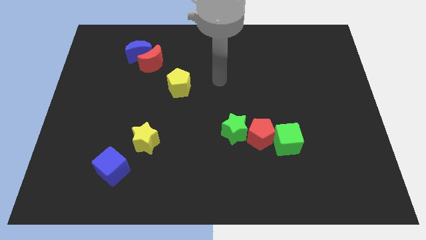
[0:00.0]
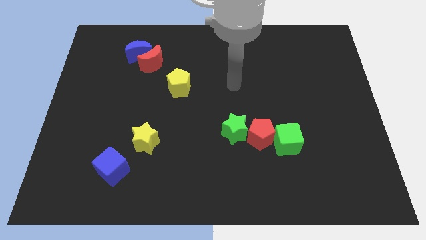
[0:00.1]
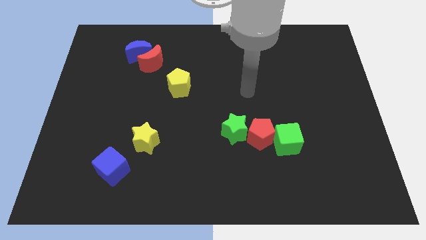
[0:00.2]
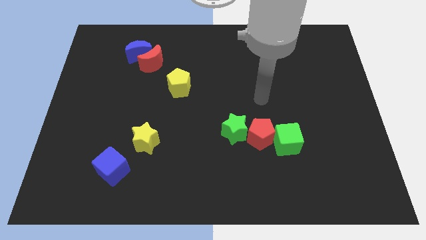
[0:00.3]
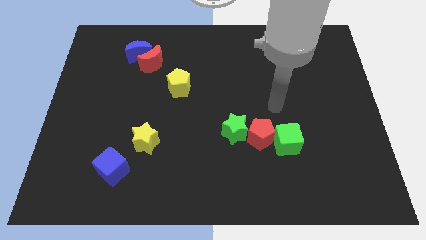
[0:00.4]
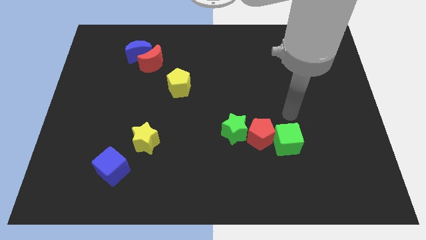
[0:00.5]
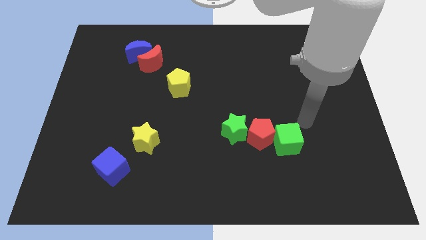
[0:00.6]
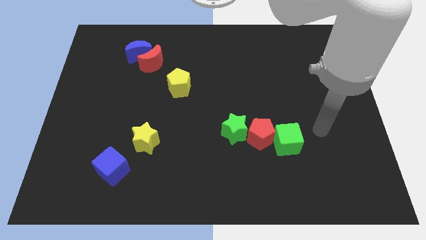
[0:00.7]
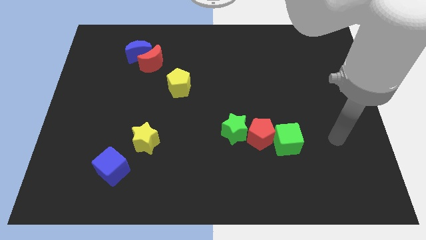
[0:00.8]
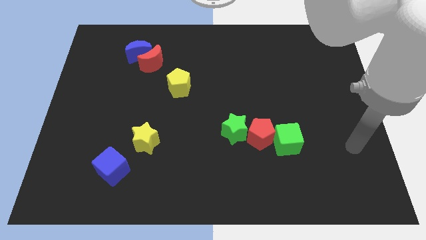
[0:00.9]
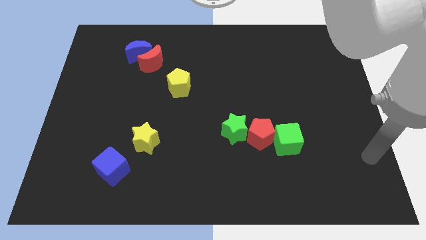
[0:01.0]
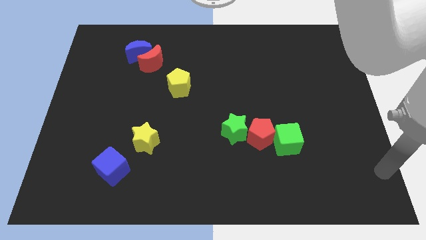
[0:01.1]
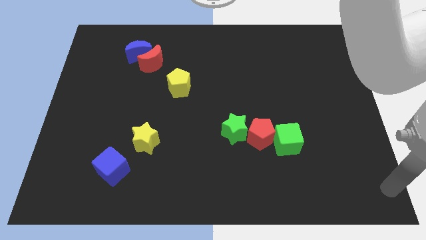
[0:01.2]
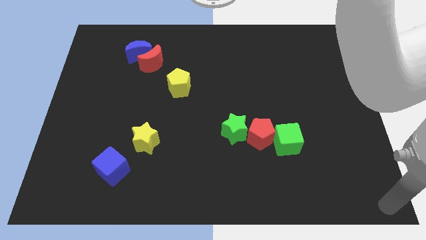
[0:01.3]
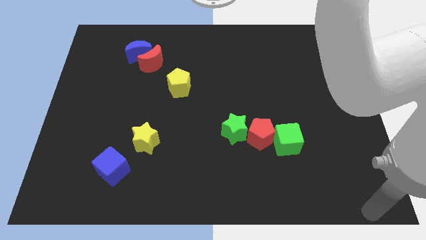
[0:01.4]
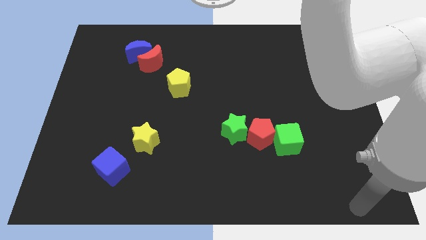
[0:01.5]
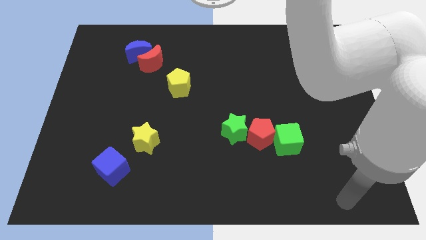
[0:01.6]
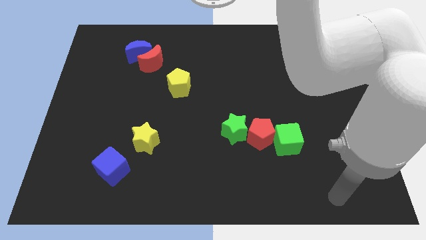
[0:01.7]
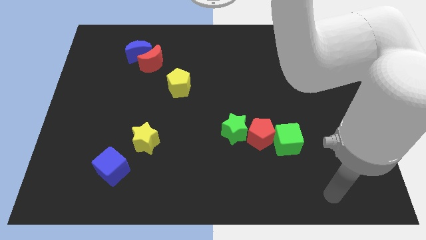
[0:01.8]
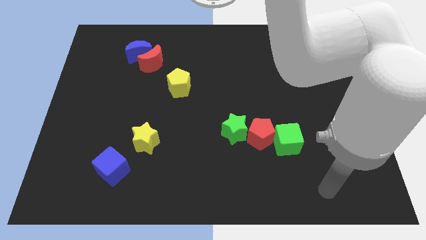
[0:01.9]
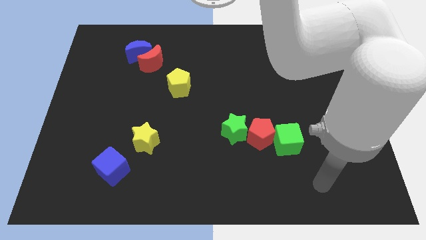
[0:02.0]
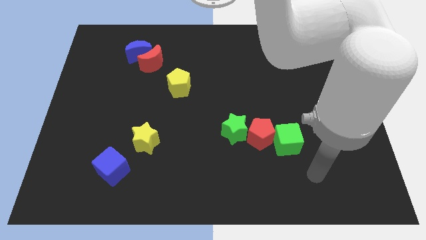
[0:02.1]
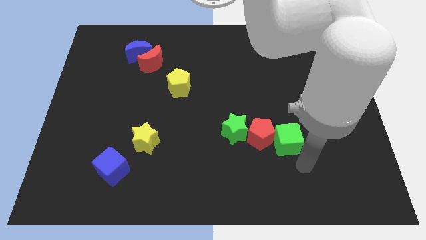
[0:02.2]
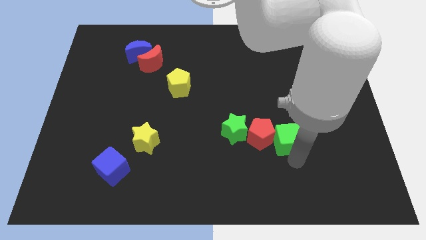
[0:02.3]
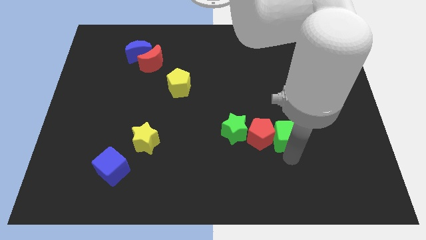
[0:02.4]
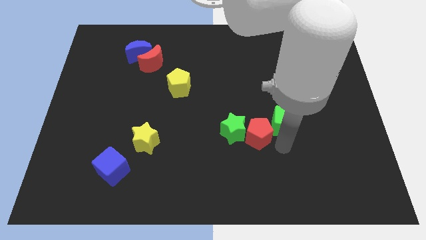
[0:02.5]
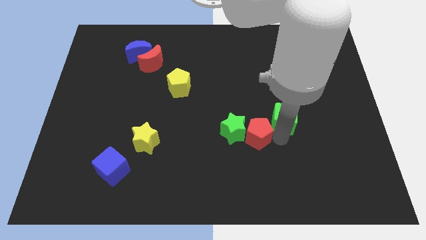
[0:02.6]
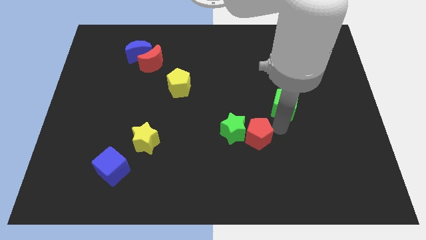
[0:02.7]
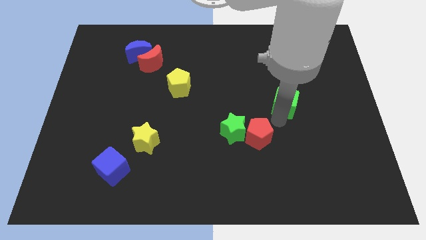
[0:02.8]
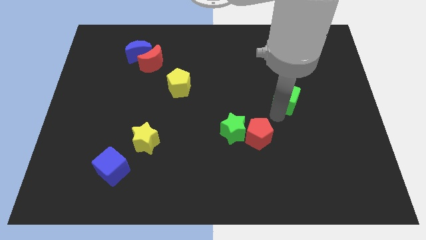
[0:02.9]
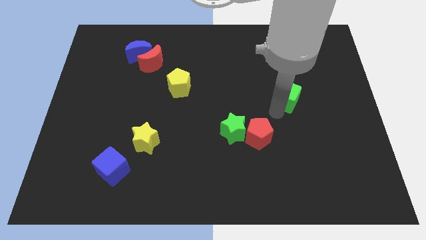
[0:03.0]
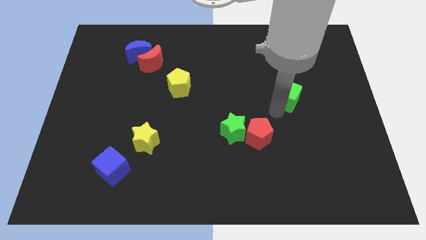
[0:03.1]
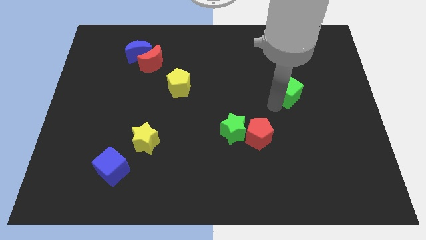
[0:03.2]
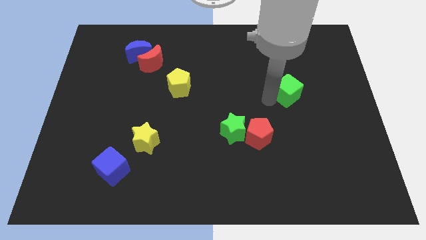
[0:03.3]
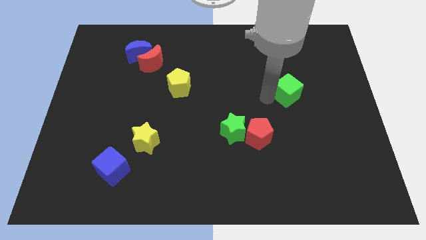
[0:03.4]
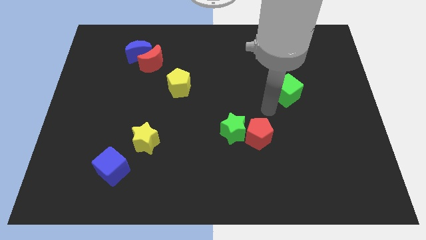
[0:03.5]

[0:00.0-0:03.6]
separate the green cube from the red pentagon

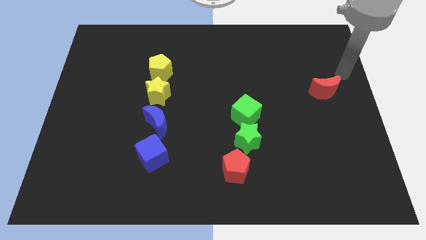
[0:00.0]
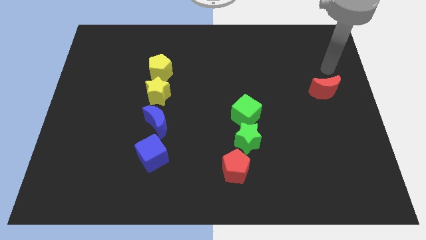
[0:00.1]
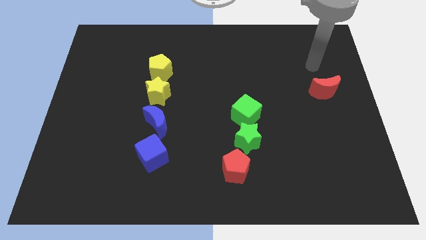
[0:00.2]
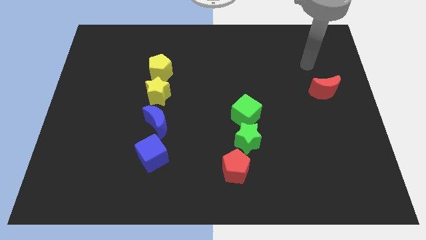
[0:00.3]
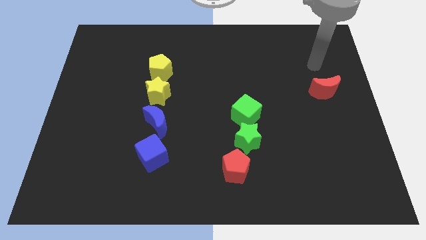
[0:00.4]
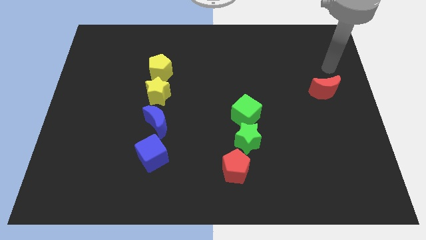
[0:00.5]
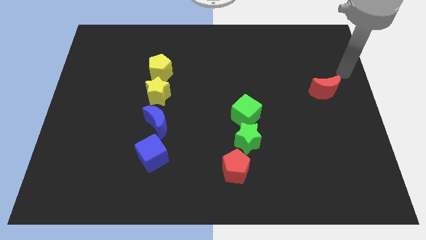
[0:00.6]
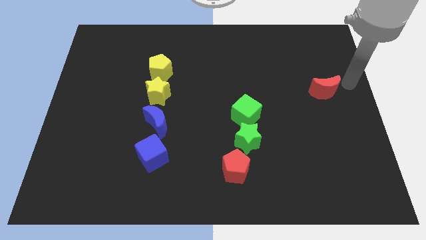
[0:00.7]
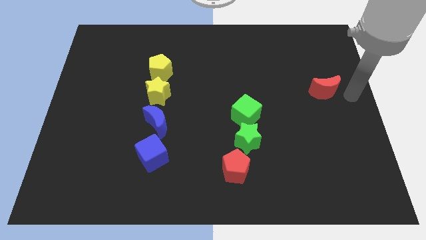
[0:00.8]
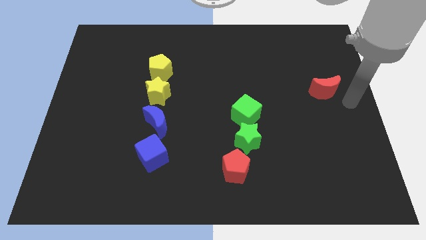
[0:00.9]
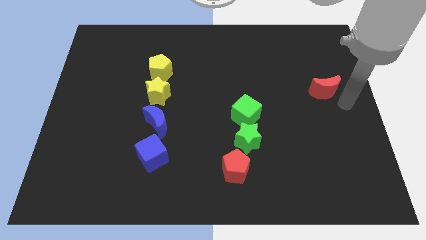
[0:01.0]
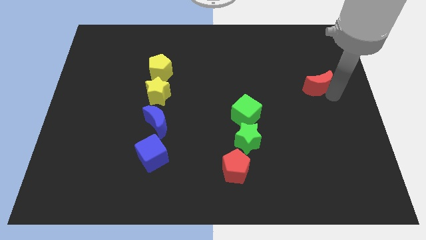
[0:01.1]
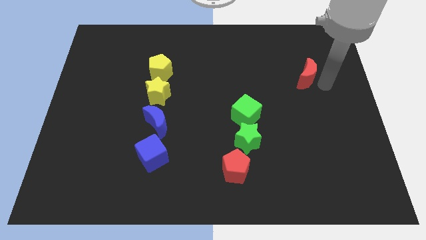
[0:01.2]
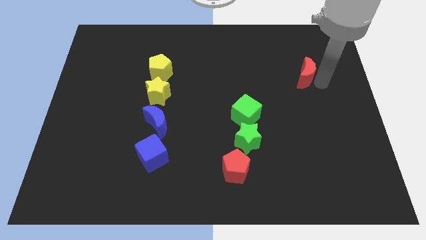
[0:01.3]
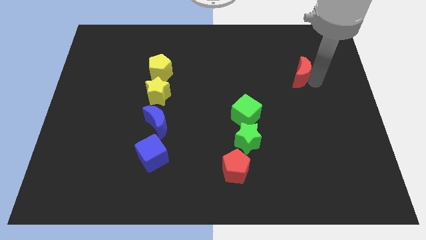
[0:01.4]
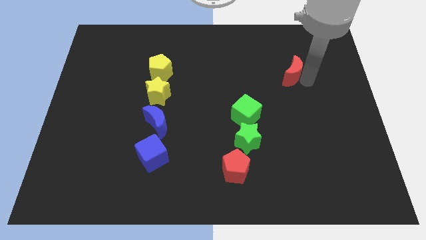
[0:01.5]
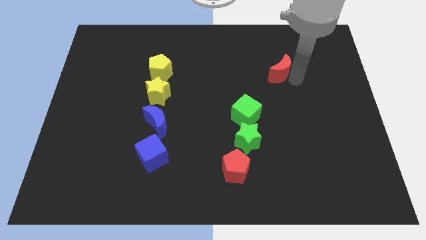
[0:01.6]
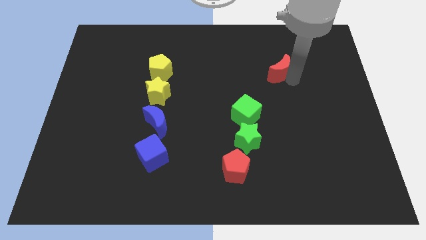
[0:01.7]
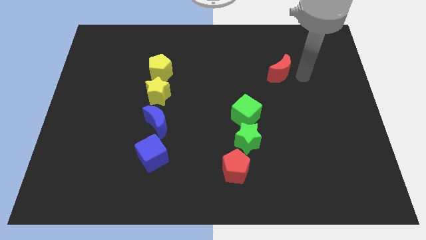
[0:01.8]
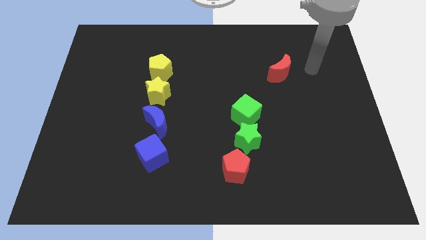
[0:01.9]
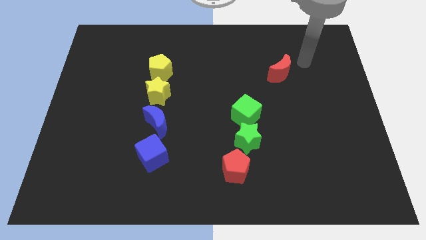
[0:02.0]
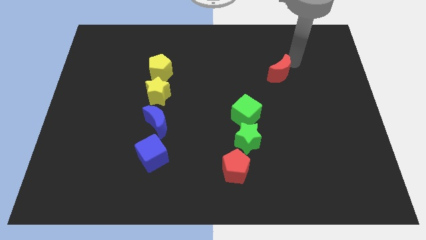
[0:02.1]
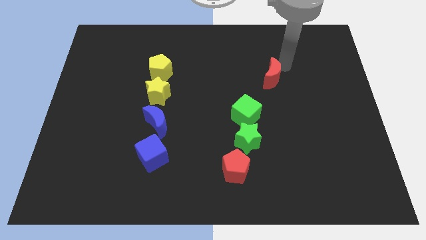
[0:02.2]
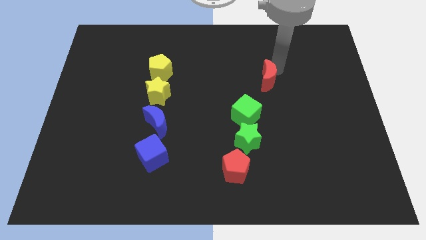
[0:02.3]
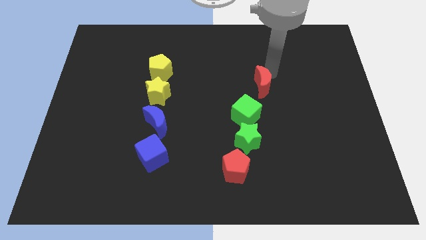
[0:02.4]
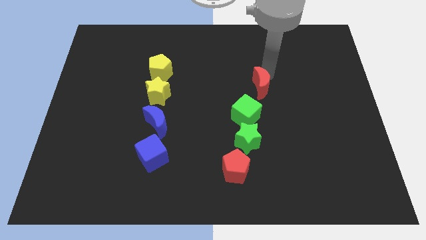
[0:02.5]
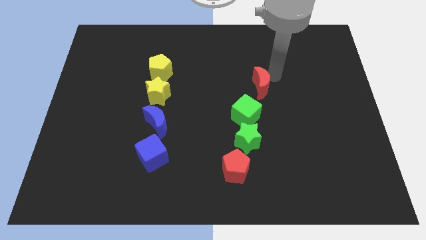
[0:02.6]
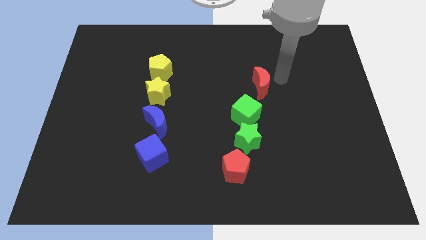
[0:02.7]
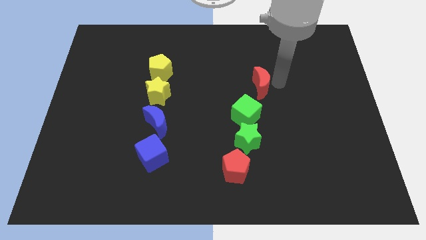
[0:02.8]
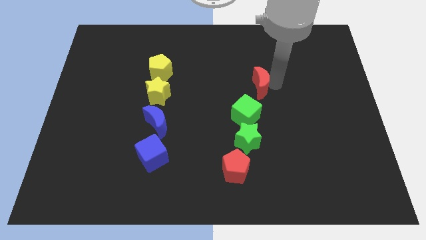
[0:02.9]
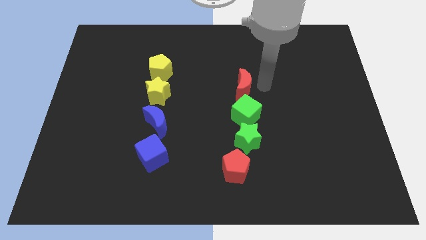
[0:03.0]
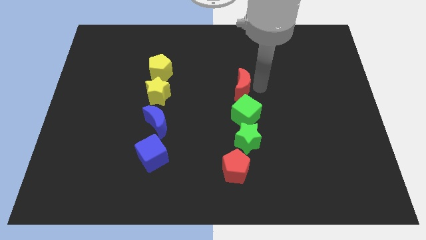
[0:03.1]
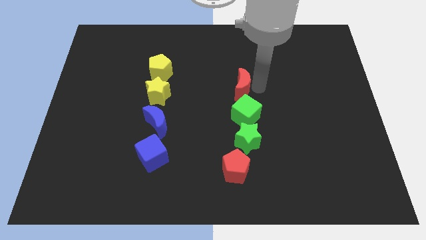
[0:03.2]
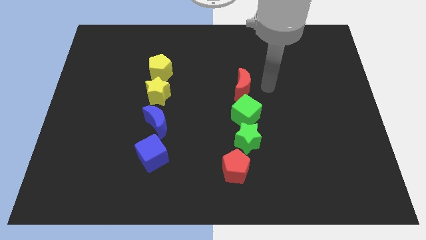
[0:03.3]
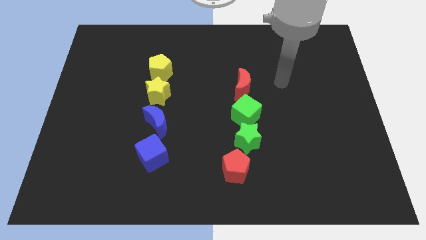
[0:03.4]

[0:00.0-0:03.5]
place the red crescent to the top of green cube

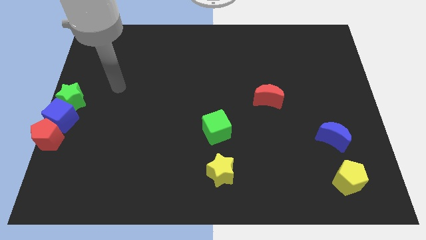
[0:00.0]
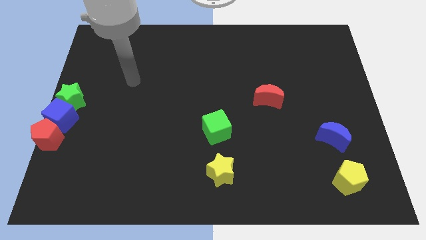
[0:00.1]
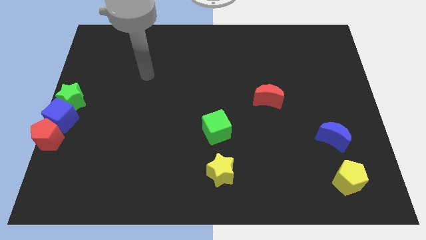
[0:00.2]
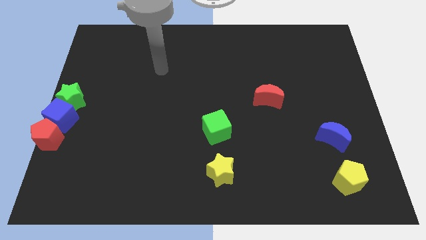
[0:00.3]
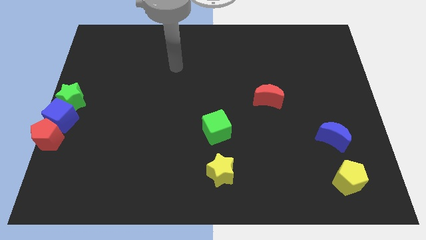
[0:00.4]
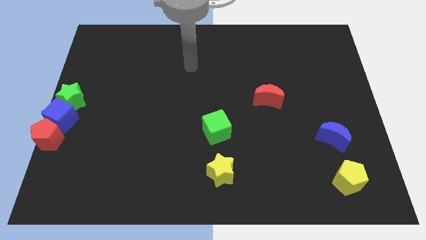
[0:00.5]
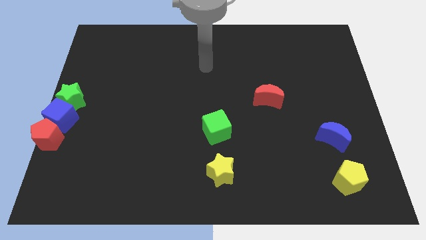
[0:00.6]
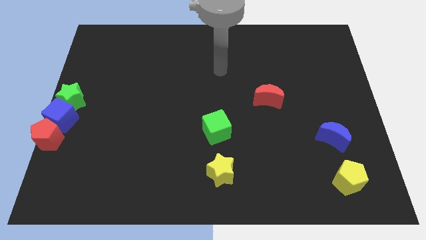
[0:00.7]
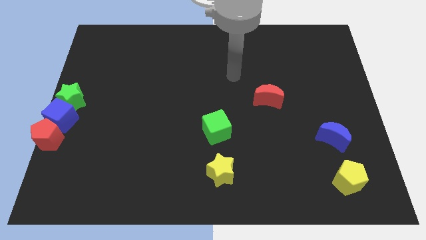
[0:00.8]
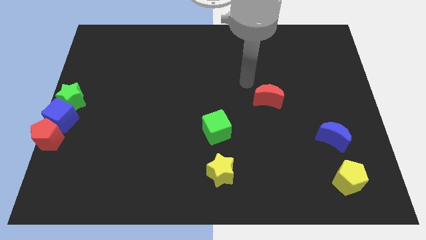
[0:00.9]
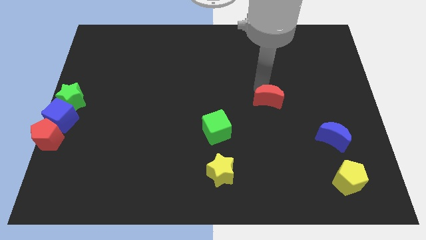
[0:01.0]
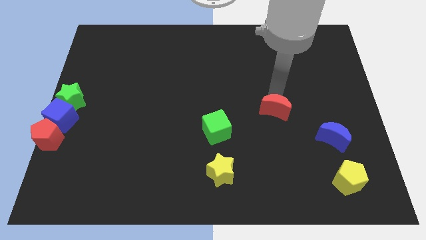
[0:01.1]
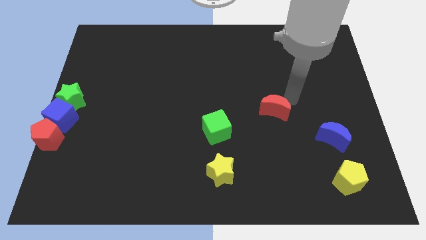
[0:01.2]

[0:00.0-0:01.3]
move the arm towards the top of red crescent

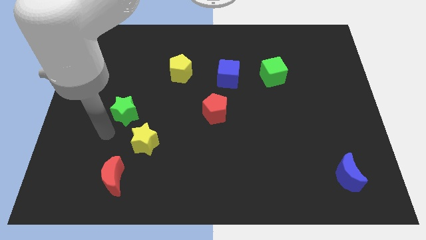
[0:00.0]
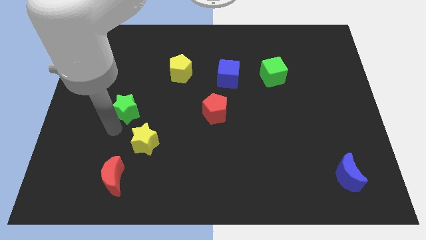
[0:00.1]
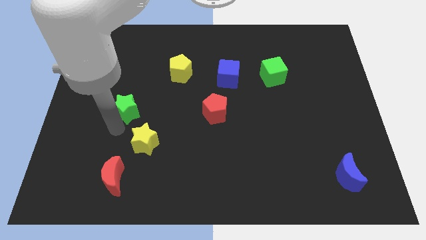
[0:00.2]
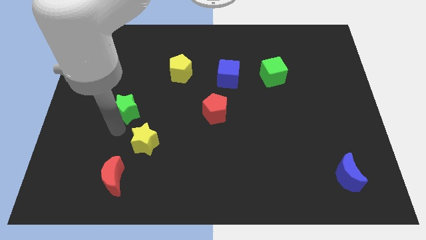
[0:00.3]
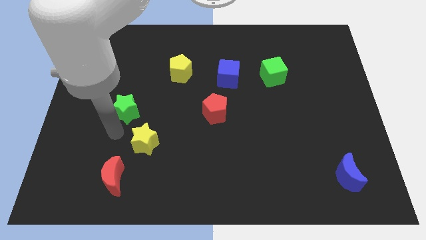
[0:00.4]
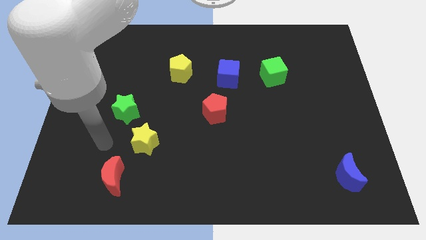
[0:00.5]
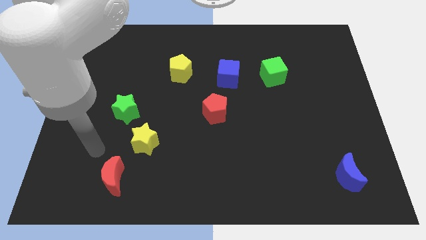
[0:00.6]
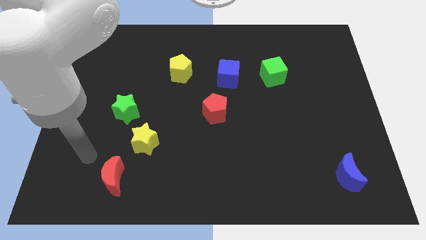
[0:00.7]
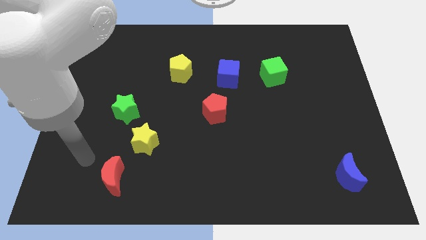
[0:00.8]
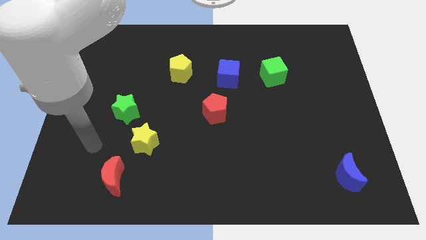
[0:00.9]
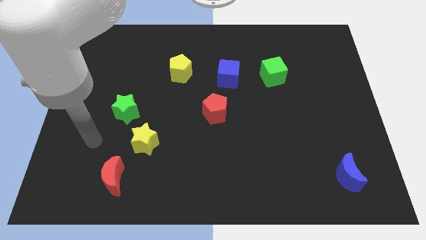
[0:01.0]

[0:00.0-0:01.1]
push the green star slightly upwards
